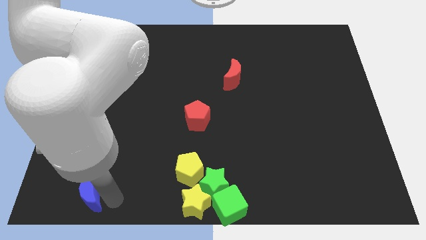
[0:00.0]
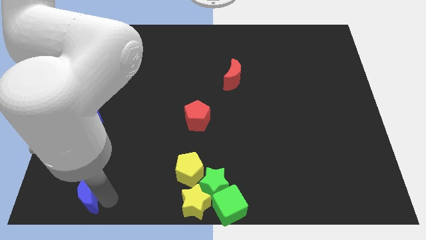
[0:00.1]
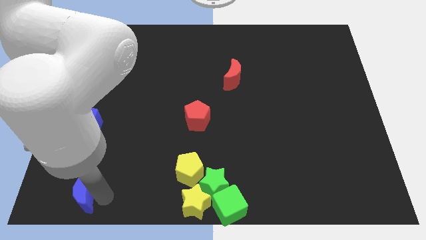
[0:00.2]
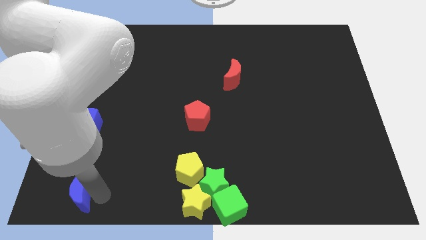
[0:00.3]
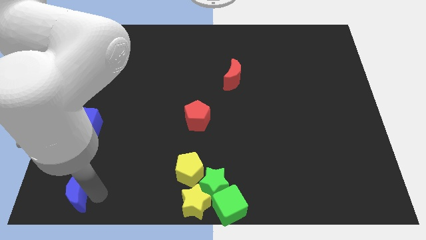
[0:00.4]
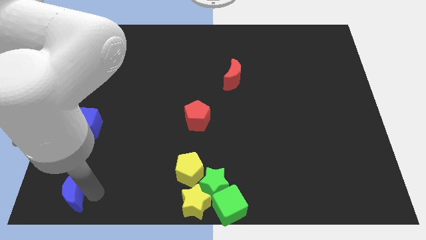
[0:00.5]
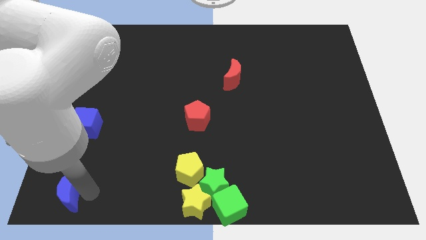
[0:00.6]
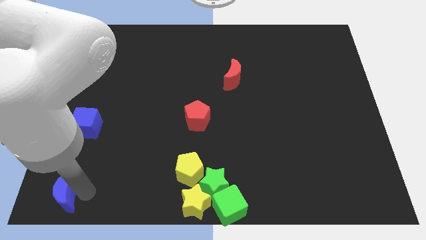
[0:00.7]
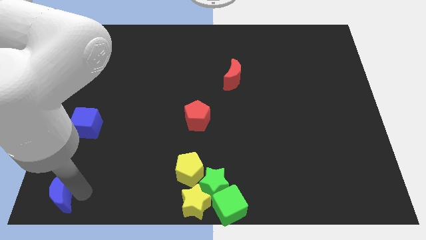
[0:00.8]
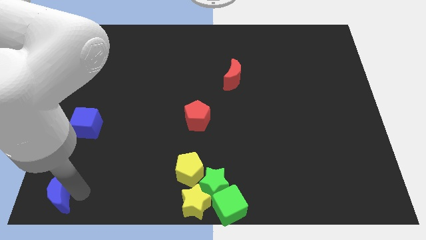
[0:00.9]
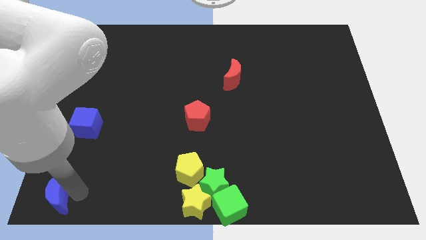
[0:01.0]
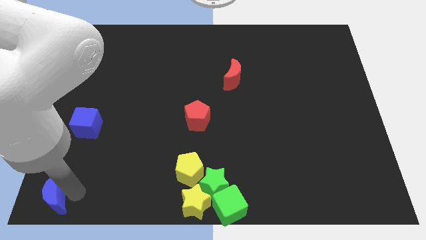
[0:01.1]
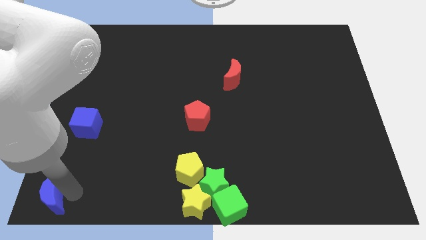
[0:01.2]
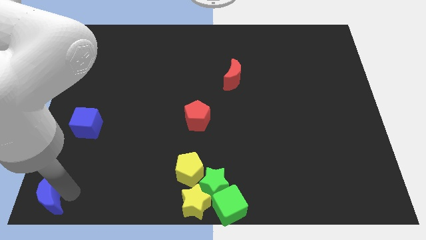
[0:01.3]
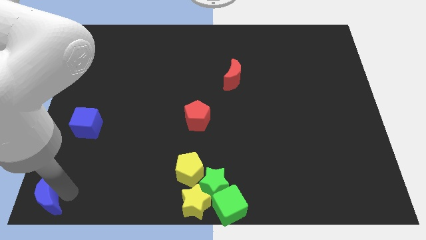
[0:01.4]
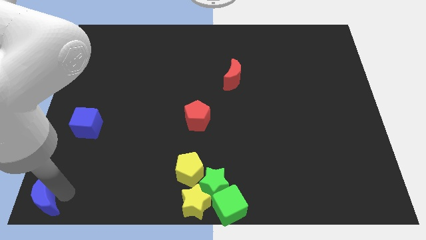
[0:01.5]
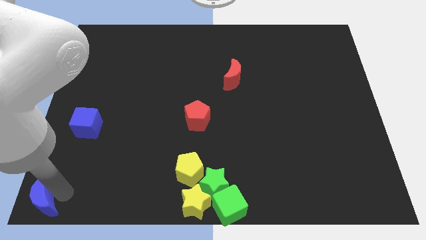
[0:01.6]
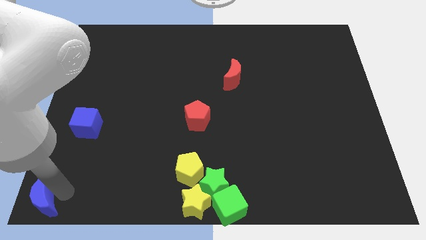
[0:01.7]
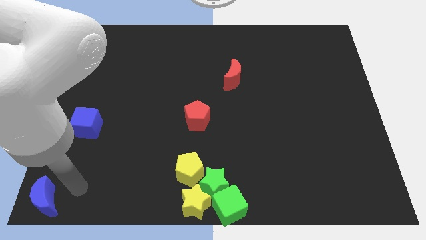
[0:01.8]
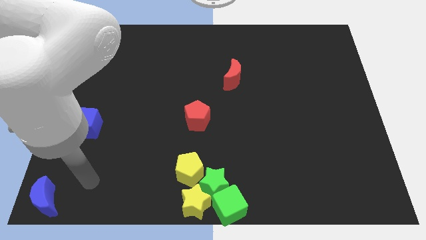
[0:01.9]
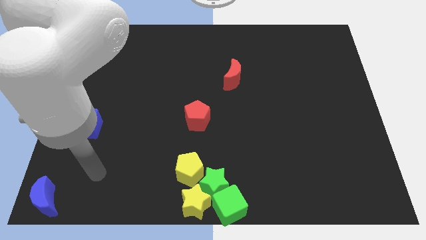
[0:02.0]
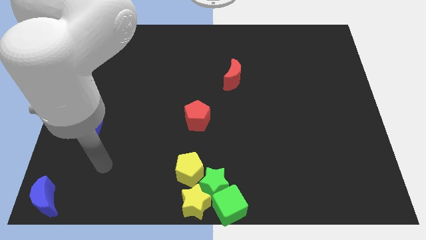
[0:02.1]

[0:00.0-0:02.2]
move blue moon to the bottom left

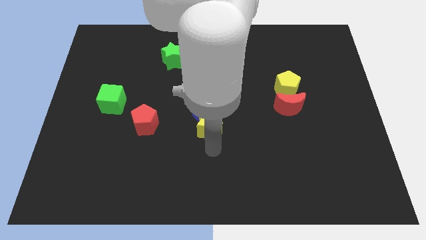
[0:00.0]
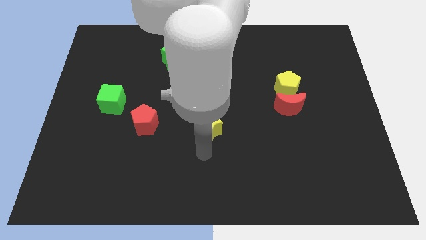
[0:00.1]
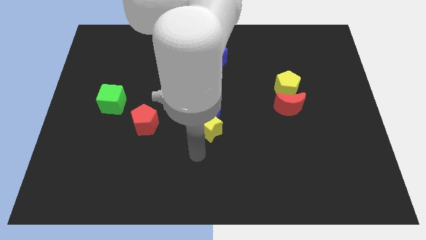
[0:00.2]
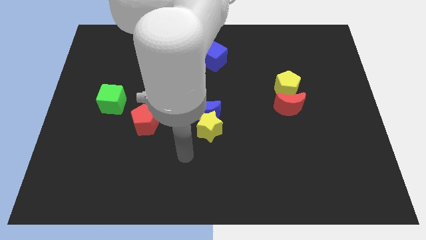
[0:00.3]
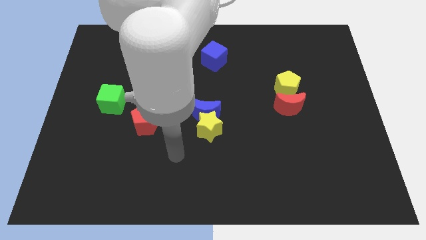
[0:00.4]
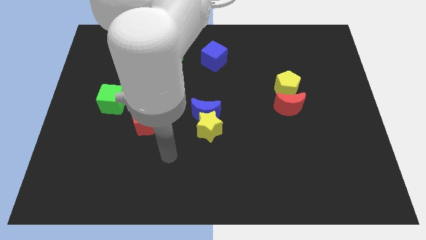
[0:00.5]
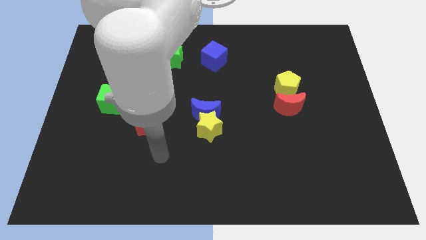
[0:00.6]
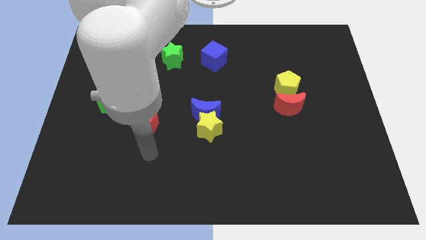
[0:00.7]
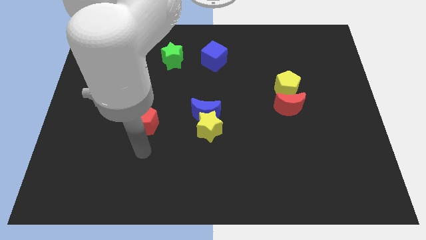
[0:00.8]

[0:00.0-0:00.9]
move your arm below the red pentagon

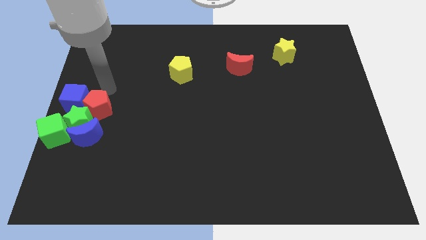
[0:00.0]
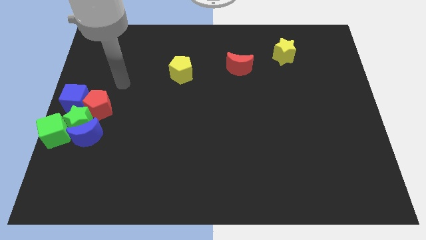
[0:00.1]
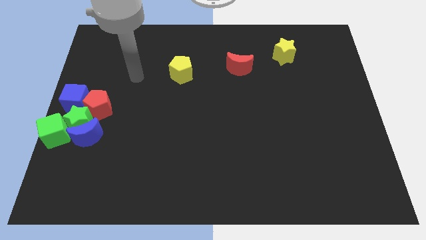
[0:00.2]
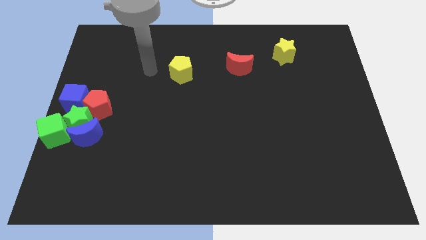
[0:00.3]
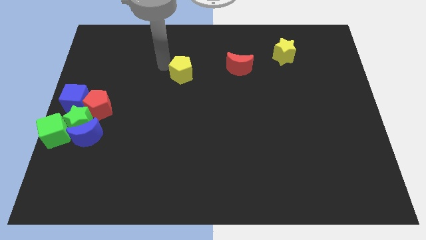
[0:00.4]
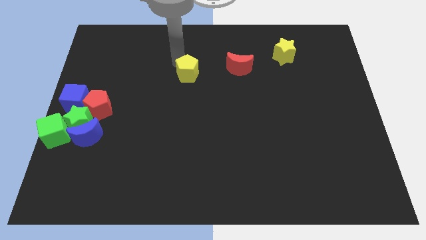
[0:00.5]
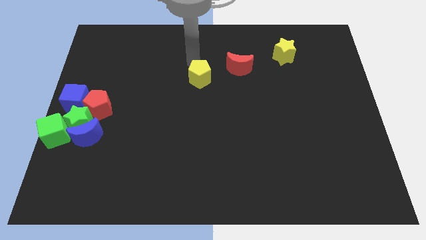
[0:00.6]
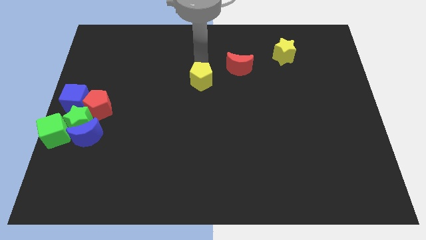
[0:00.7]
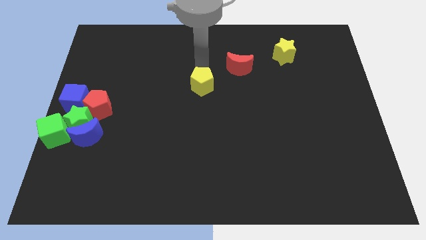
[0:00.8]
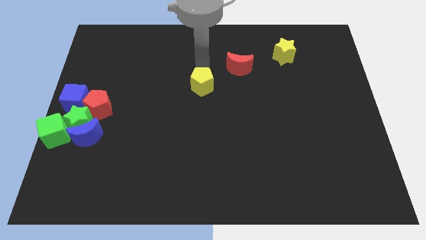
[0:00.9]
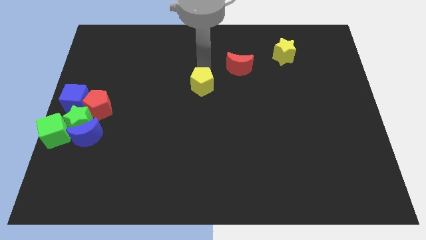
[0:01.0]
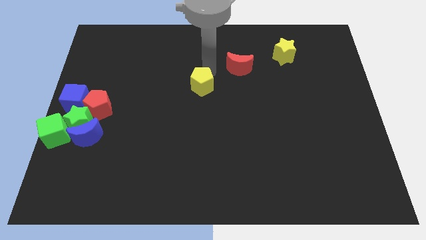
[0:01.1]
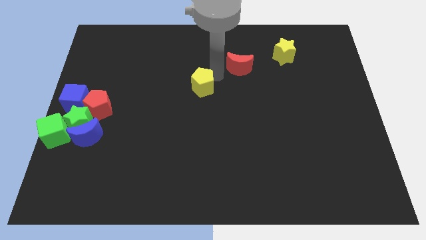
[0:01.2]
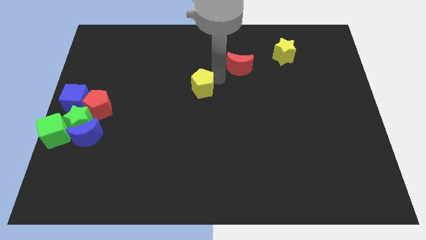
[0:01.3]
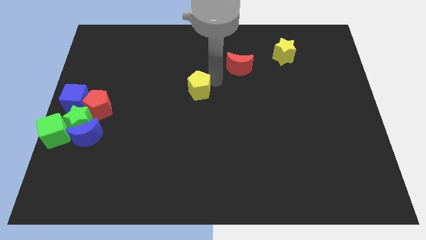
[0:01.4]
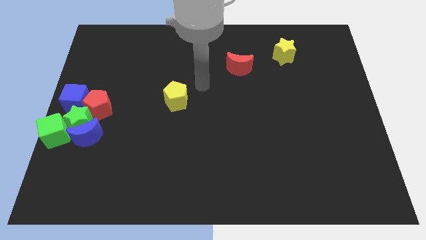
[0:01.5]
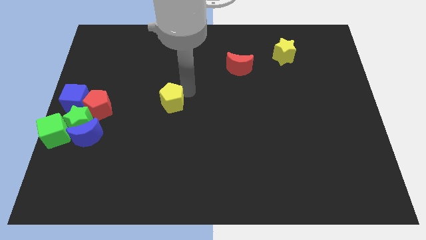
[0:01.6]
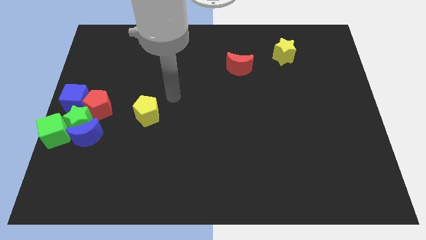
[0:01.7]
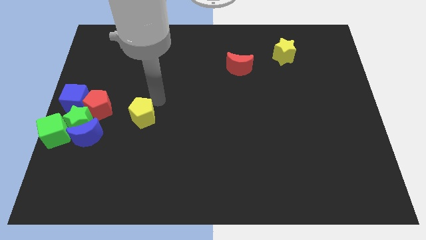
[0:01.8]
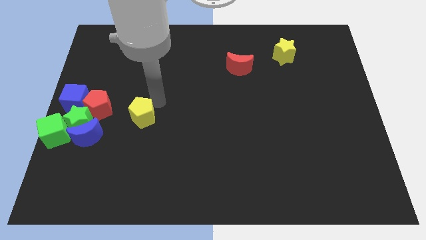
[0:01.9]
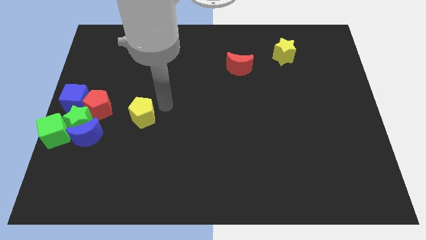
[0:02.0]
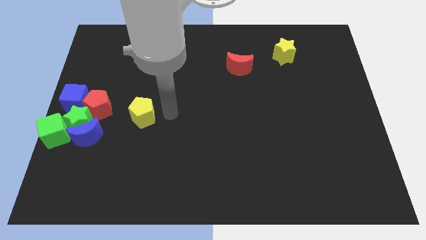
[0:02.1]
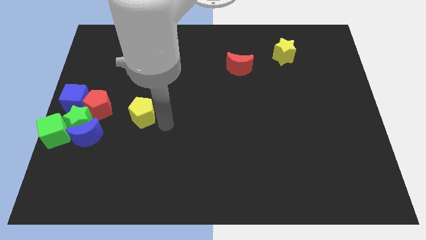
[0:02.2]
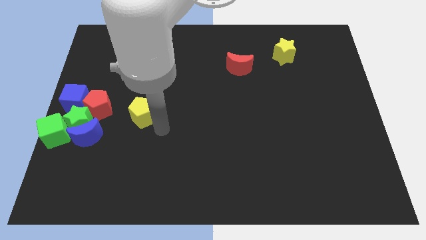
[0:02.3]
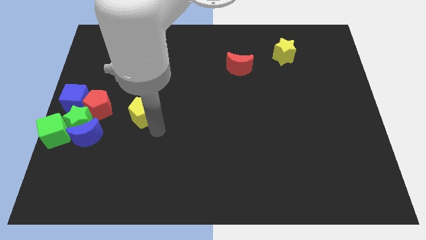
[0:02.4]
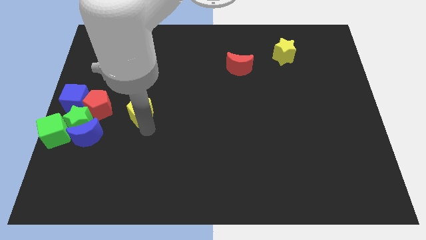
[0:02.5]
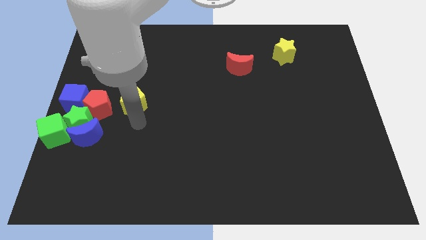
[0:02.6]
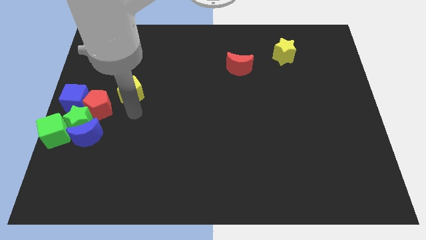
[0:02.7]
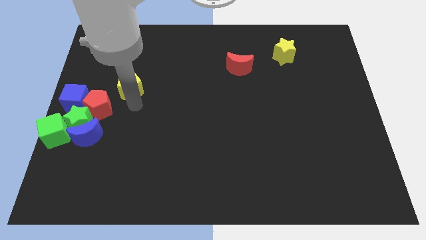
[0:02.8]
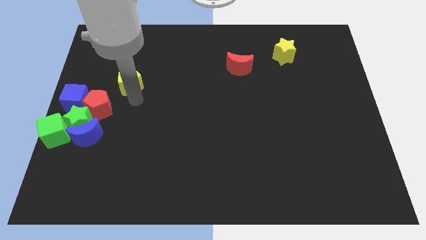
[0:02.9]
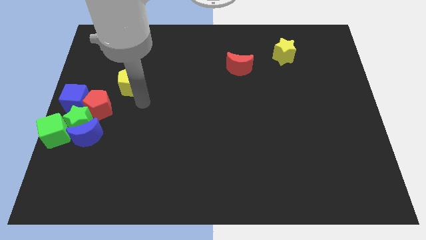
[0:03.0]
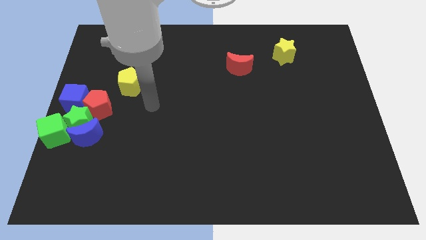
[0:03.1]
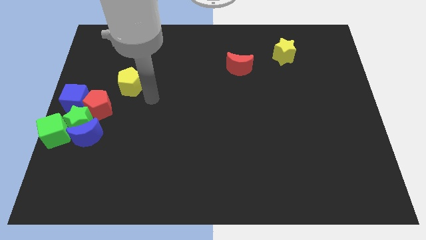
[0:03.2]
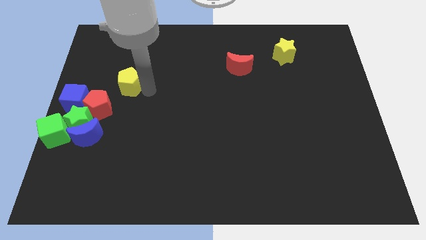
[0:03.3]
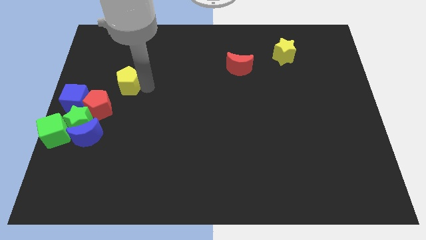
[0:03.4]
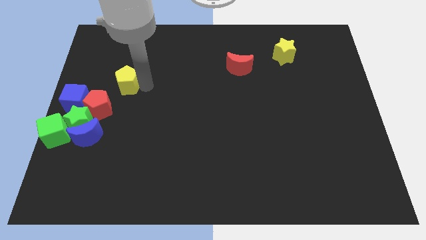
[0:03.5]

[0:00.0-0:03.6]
move your arm away from the red pentagon

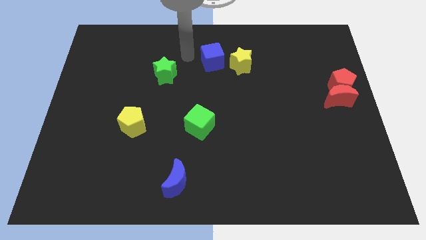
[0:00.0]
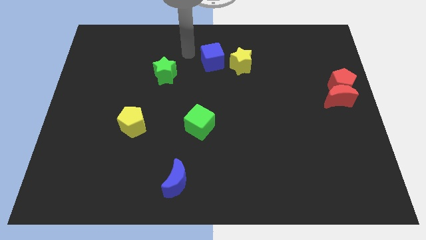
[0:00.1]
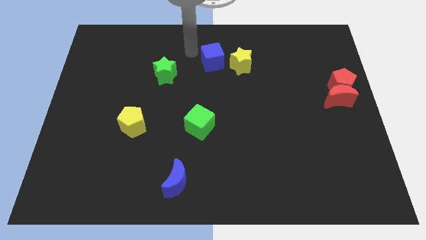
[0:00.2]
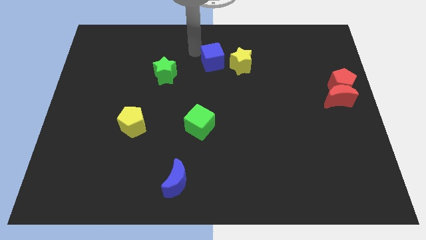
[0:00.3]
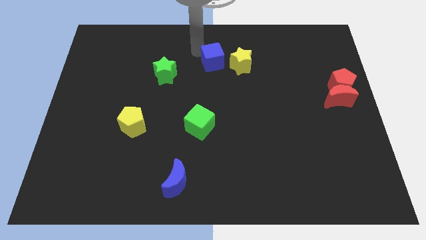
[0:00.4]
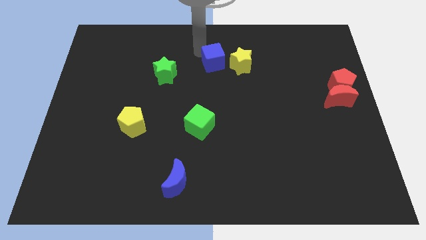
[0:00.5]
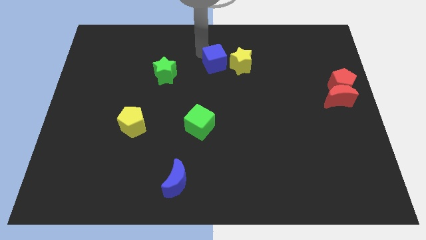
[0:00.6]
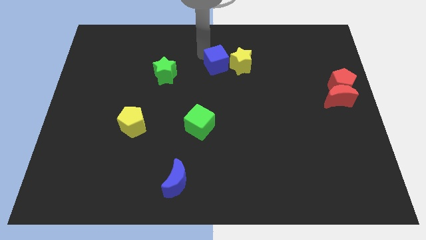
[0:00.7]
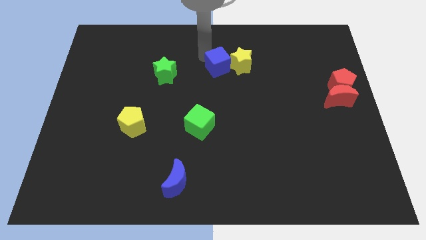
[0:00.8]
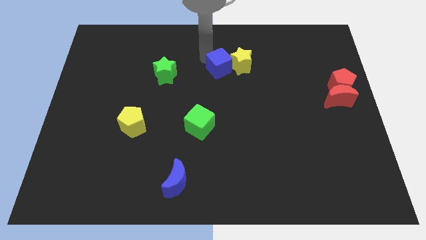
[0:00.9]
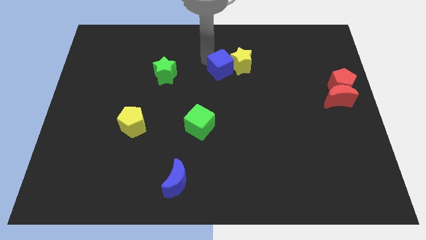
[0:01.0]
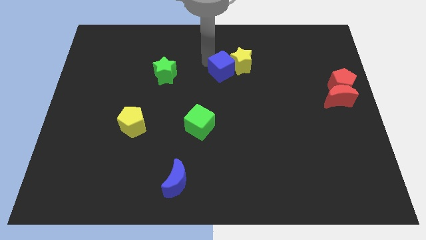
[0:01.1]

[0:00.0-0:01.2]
push the blue cube to the left of the yellow star

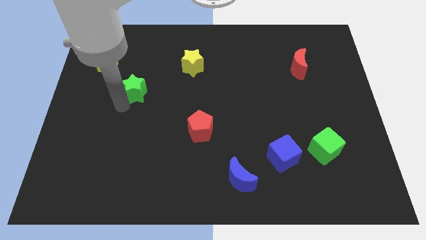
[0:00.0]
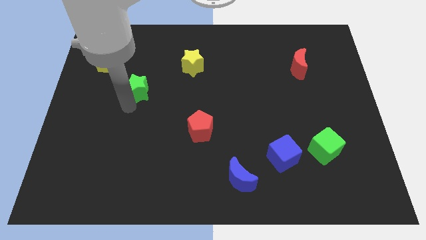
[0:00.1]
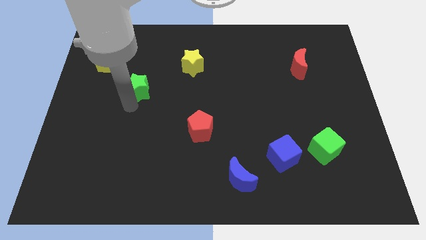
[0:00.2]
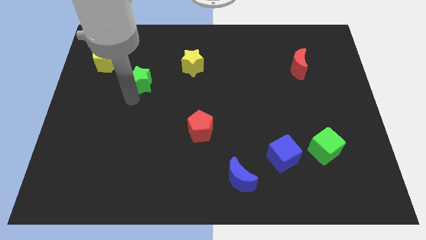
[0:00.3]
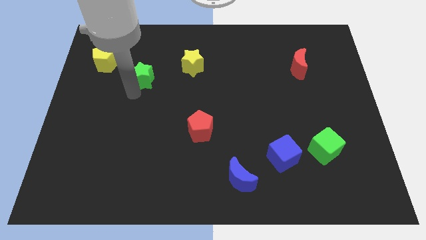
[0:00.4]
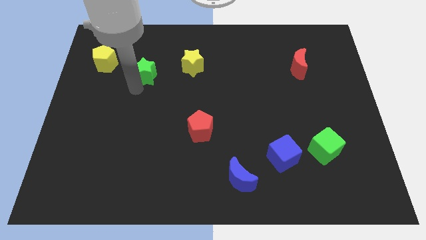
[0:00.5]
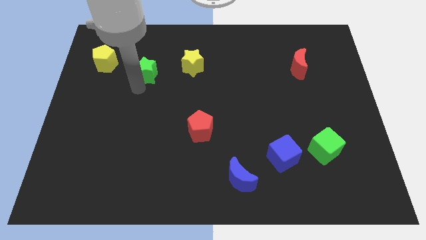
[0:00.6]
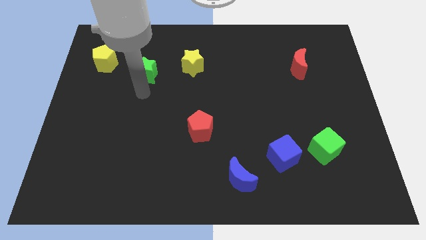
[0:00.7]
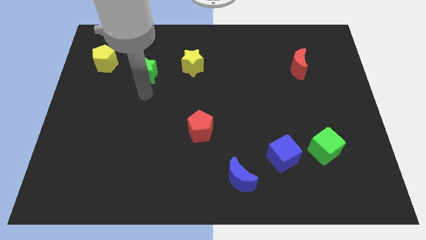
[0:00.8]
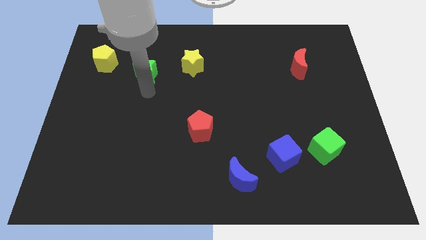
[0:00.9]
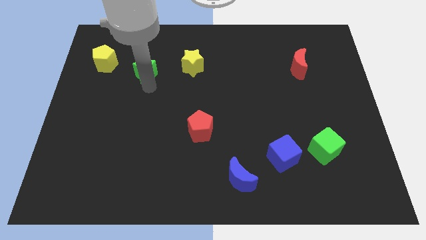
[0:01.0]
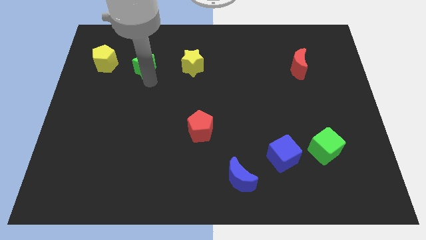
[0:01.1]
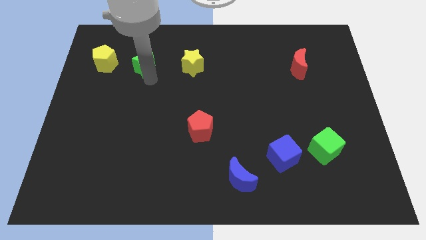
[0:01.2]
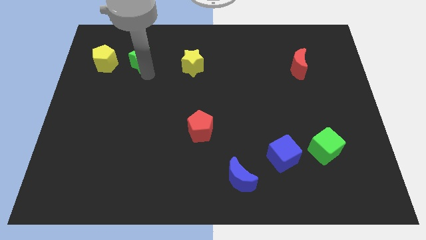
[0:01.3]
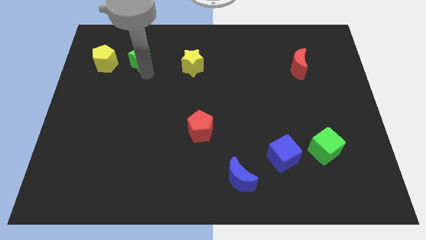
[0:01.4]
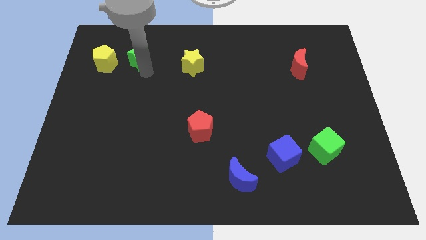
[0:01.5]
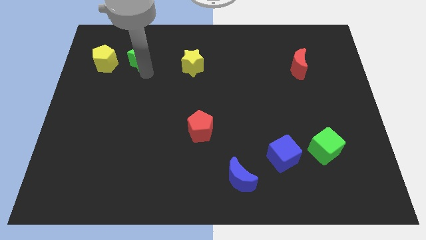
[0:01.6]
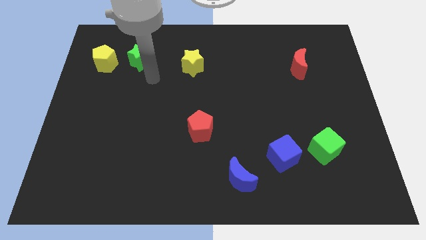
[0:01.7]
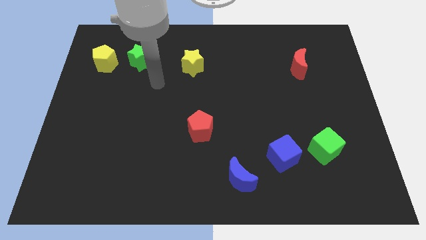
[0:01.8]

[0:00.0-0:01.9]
move the green star to the right side of the yellow pentagon
